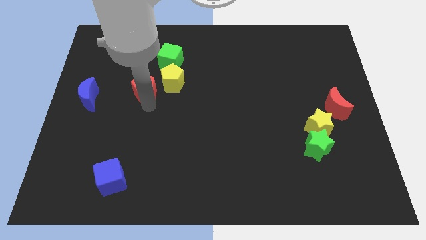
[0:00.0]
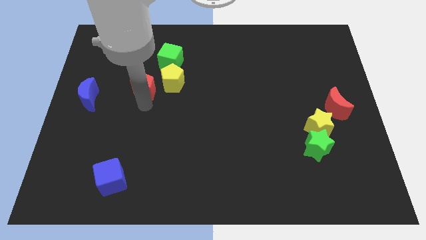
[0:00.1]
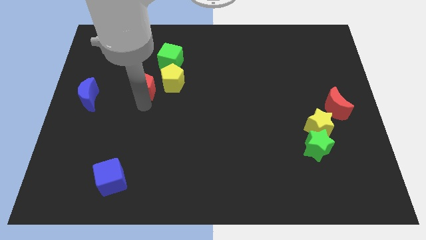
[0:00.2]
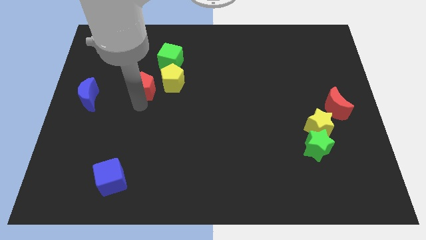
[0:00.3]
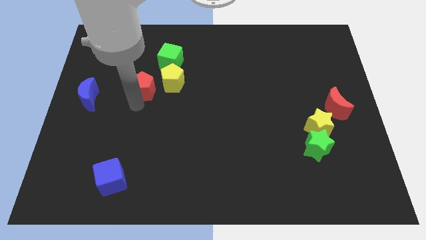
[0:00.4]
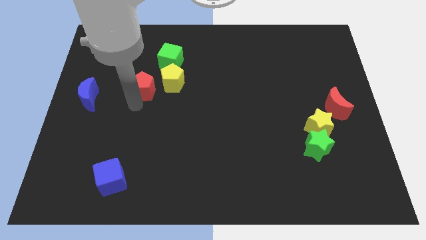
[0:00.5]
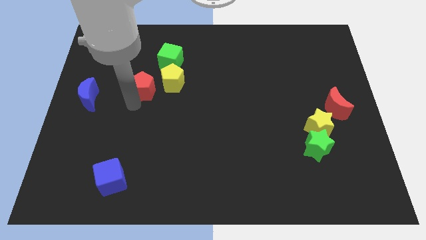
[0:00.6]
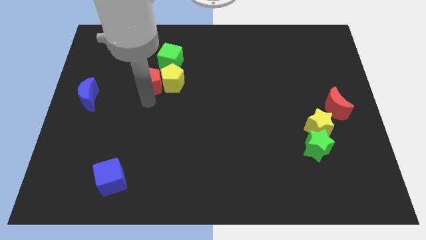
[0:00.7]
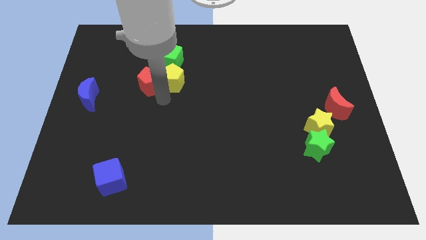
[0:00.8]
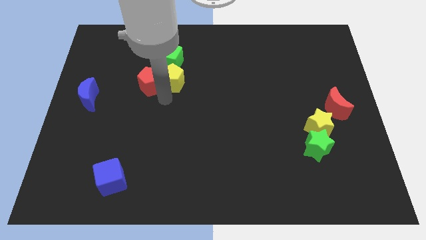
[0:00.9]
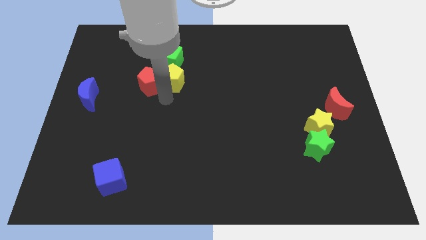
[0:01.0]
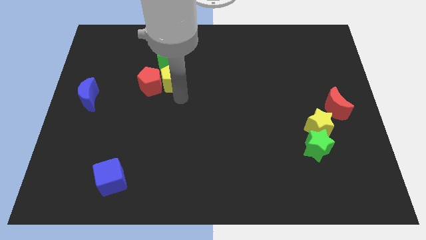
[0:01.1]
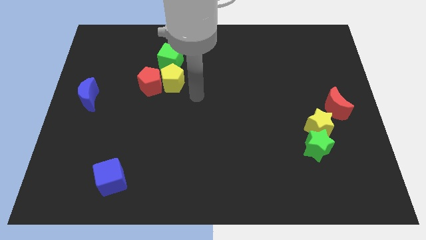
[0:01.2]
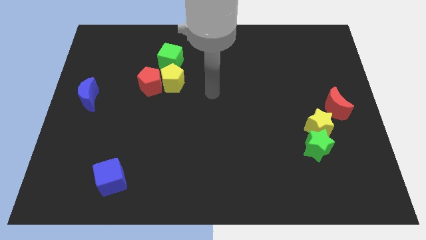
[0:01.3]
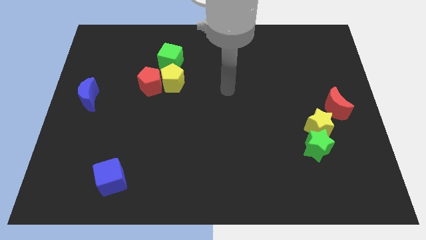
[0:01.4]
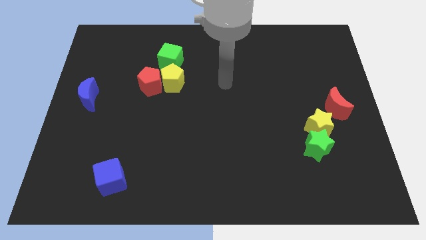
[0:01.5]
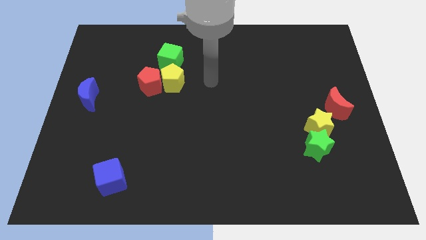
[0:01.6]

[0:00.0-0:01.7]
point your arm at the right side of the yellow pentagon

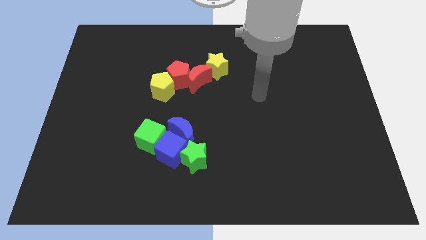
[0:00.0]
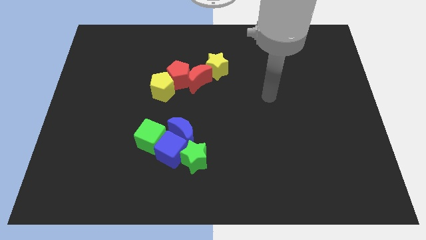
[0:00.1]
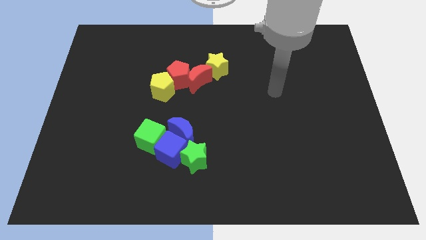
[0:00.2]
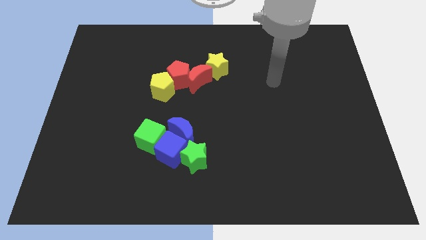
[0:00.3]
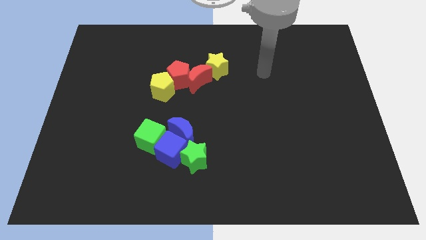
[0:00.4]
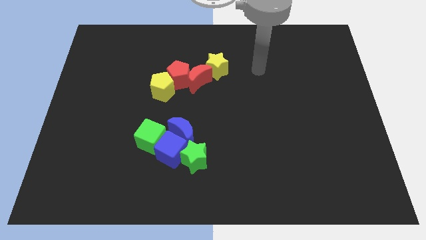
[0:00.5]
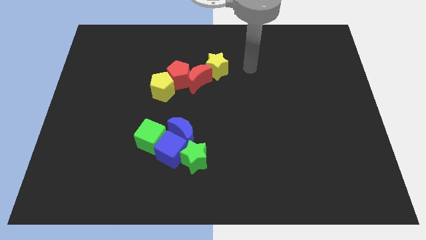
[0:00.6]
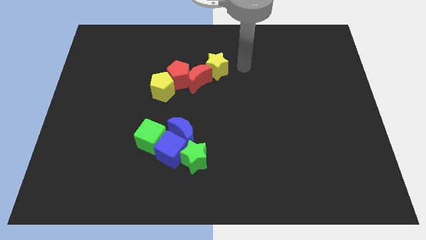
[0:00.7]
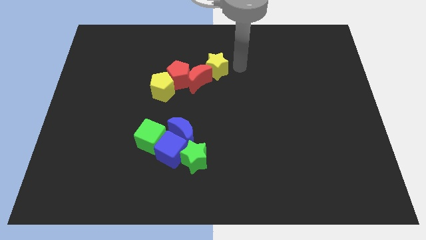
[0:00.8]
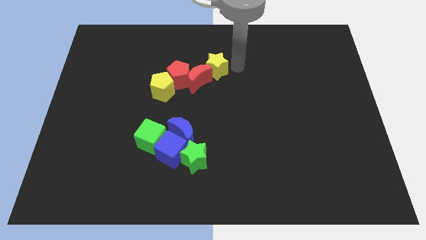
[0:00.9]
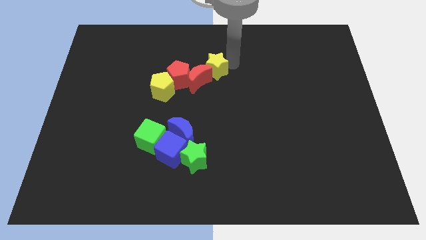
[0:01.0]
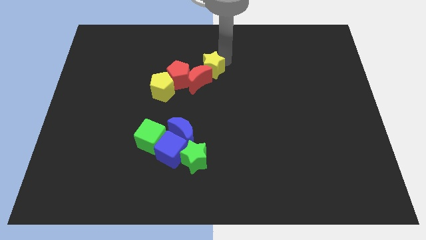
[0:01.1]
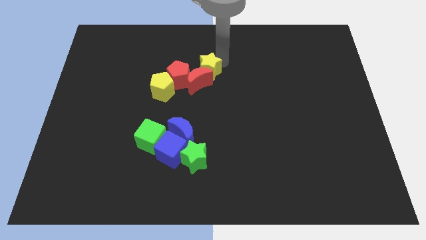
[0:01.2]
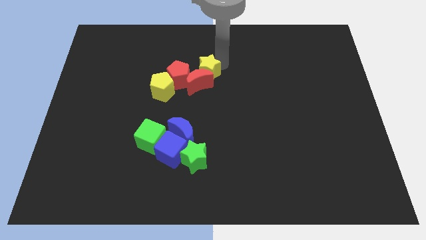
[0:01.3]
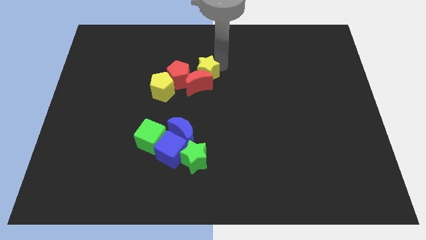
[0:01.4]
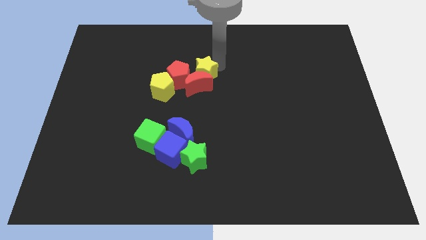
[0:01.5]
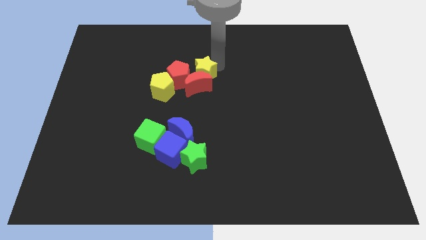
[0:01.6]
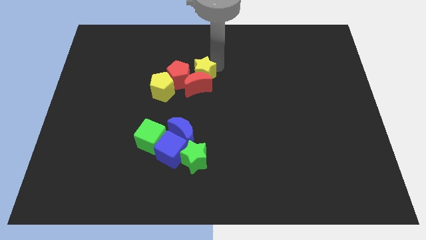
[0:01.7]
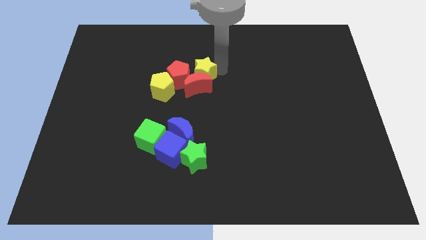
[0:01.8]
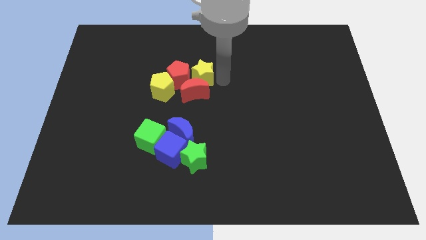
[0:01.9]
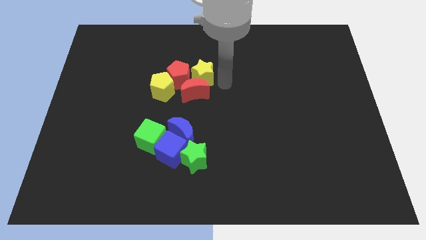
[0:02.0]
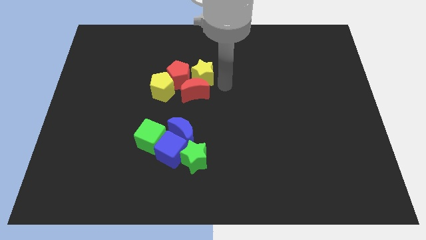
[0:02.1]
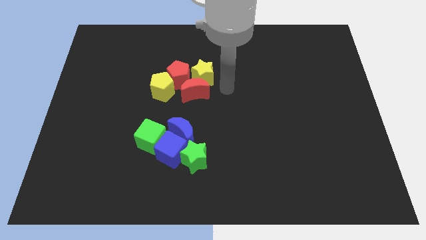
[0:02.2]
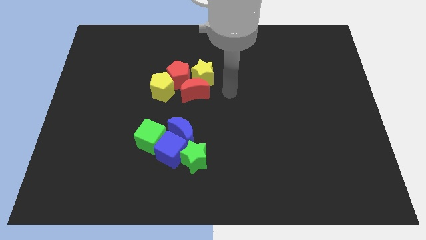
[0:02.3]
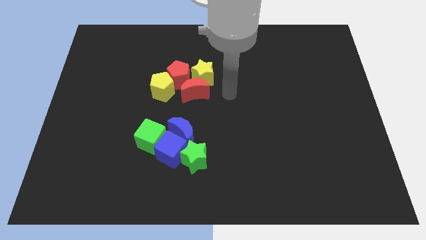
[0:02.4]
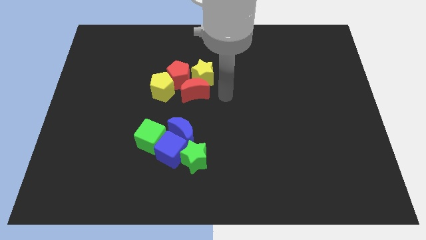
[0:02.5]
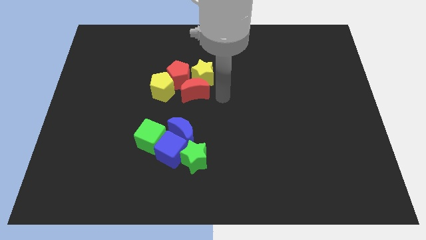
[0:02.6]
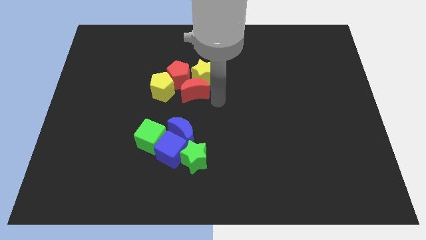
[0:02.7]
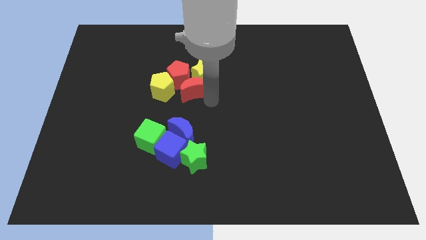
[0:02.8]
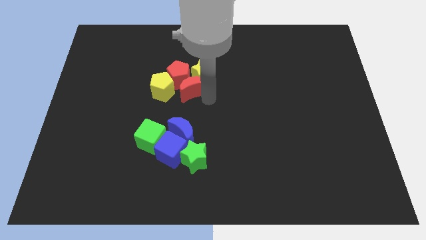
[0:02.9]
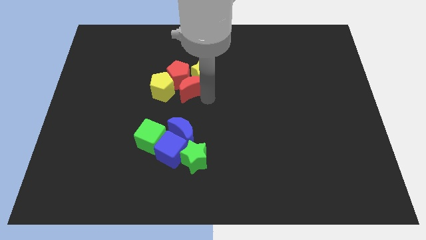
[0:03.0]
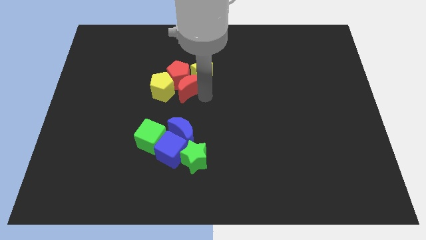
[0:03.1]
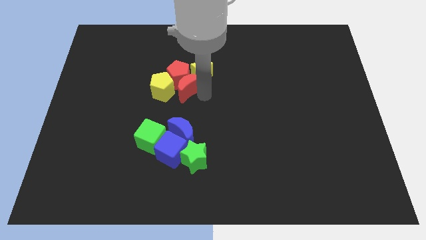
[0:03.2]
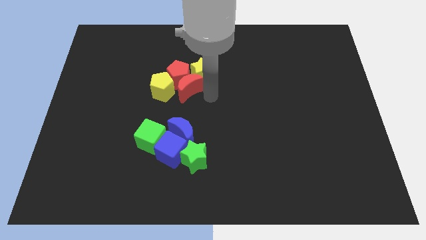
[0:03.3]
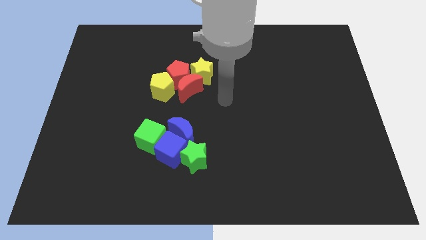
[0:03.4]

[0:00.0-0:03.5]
adjust the yellow star and the red crescent at the center of the board

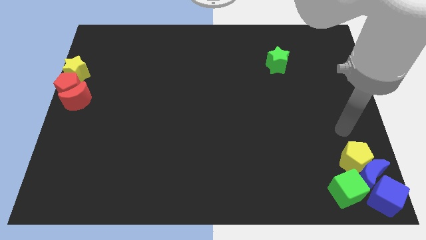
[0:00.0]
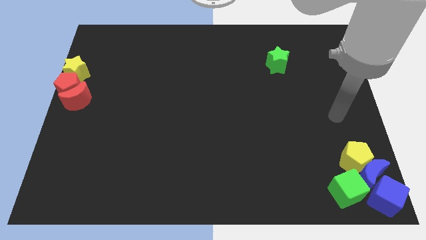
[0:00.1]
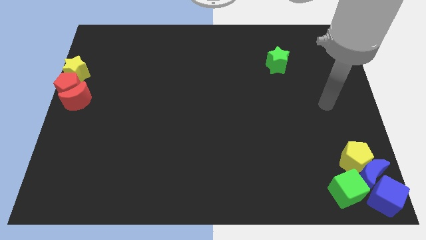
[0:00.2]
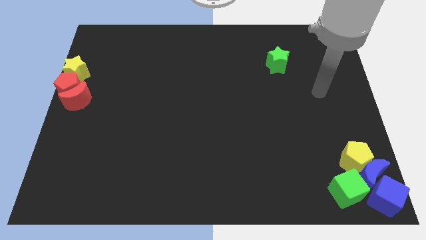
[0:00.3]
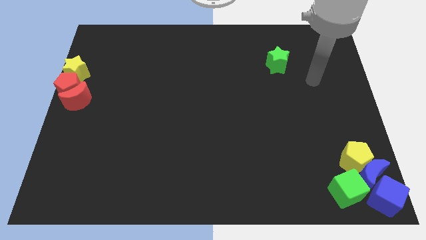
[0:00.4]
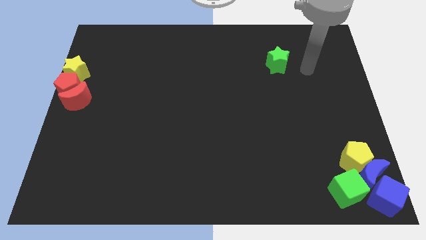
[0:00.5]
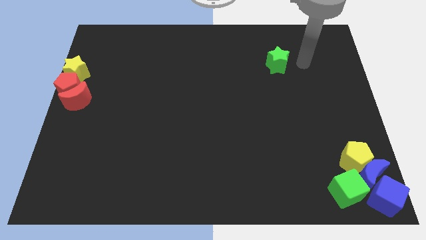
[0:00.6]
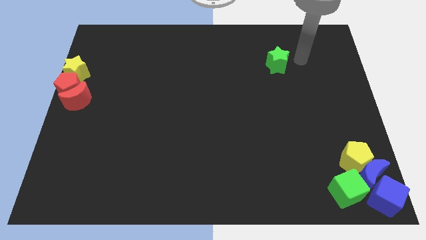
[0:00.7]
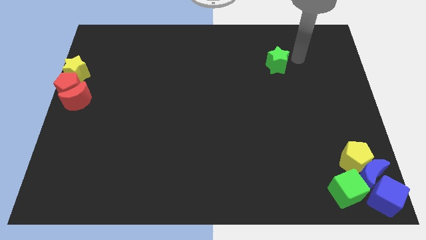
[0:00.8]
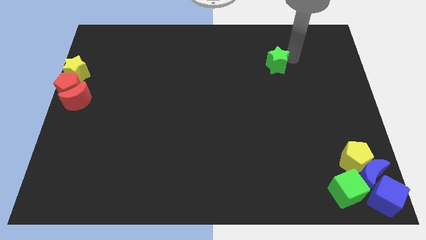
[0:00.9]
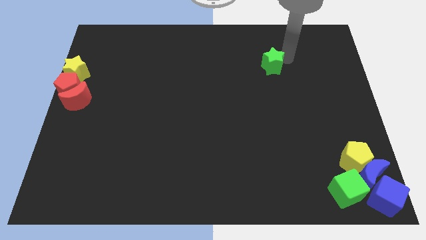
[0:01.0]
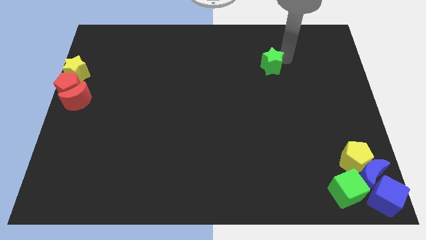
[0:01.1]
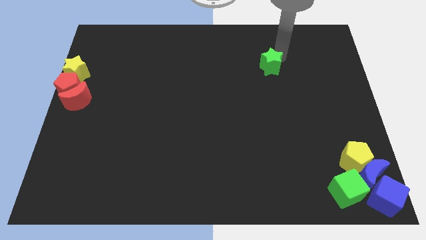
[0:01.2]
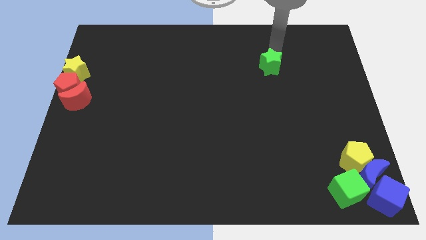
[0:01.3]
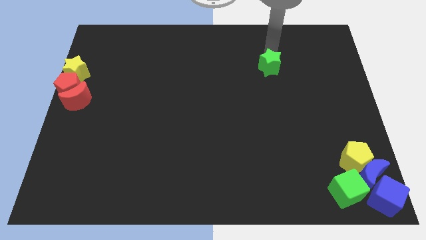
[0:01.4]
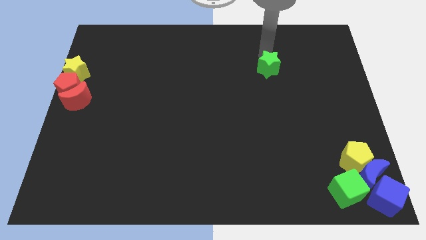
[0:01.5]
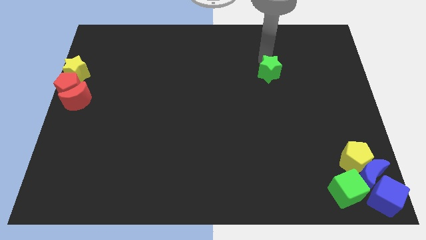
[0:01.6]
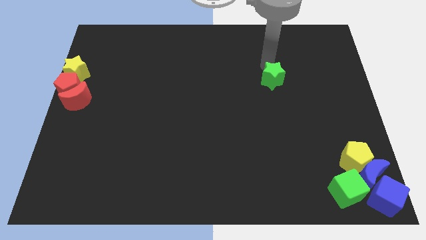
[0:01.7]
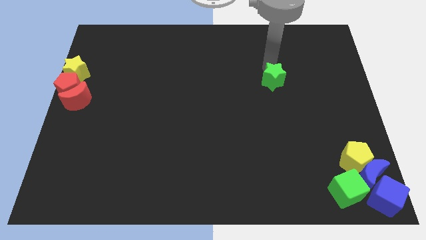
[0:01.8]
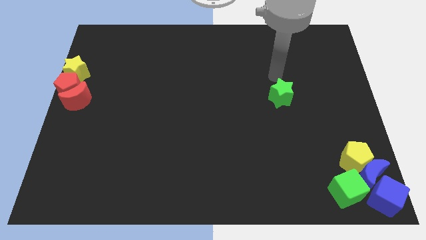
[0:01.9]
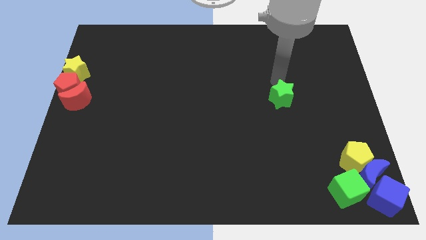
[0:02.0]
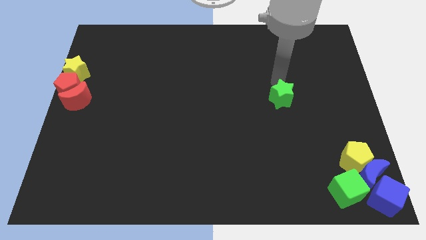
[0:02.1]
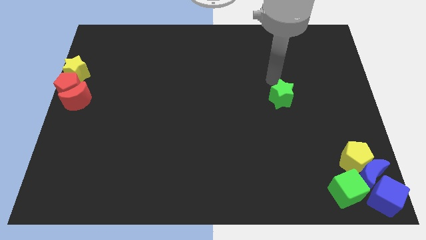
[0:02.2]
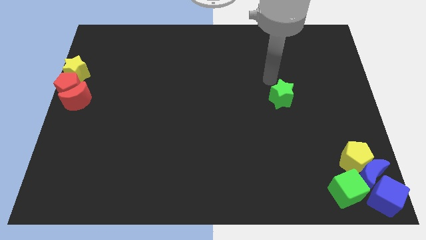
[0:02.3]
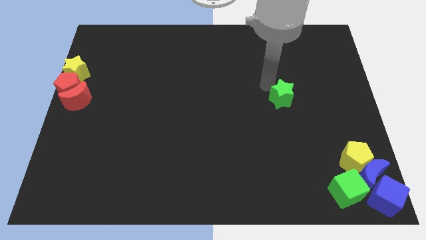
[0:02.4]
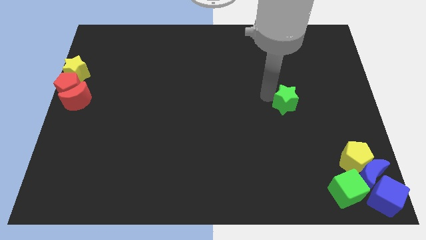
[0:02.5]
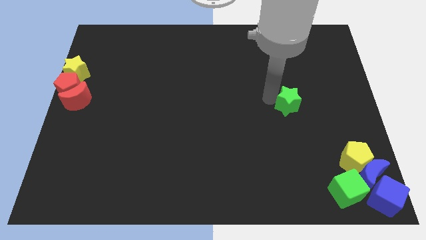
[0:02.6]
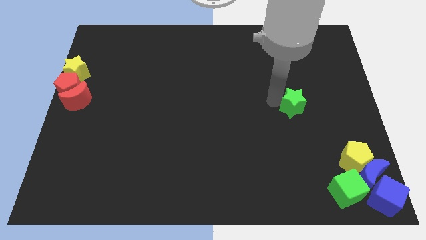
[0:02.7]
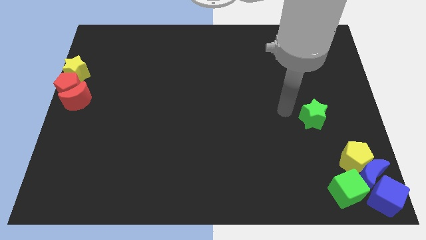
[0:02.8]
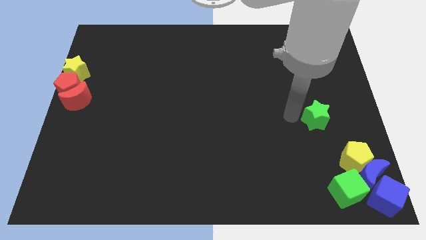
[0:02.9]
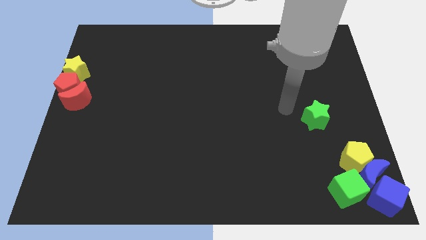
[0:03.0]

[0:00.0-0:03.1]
move the green star towards yellow pentagon

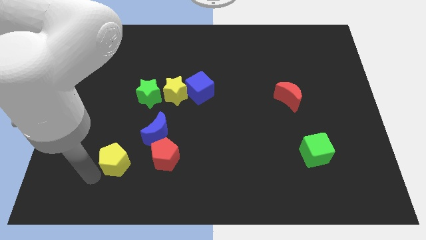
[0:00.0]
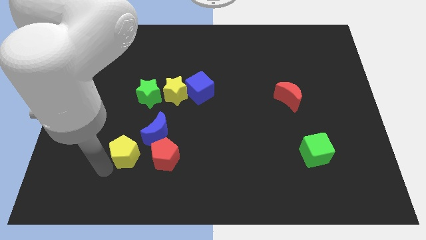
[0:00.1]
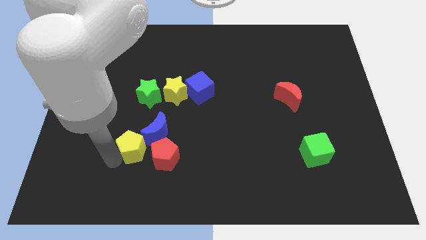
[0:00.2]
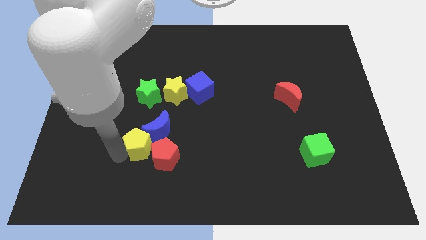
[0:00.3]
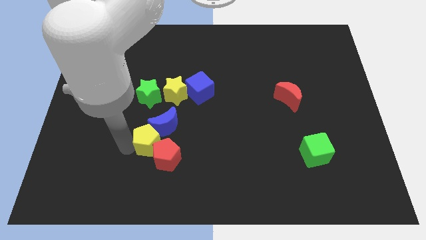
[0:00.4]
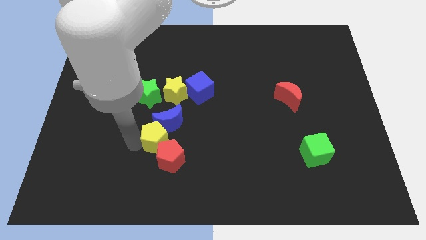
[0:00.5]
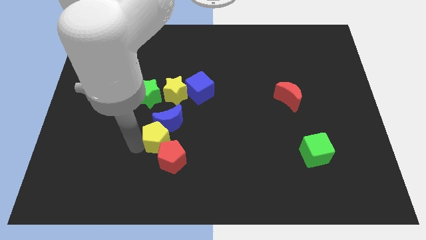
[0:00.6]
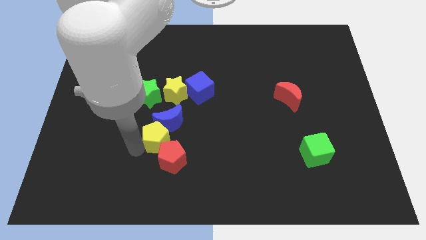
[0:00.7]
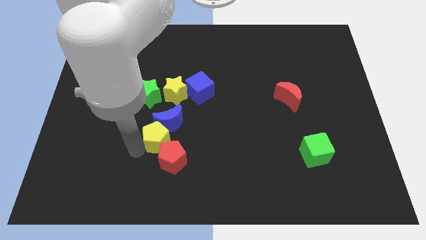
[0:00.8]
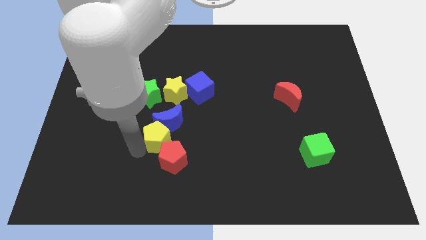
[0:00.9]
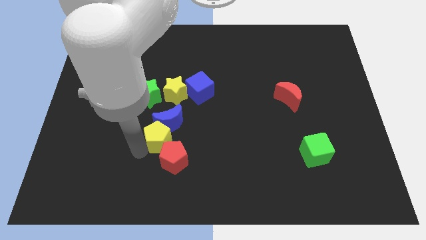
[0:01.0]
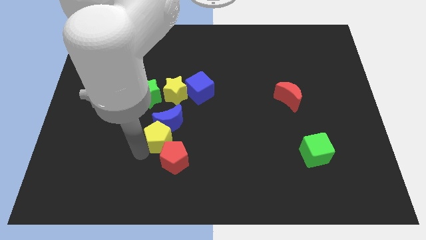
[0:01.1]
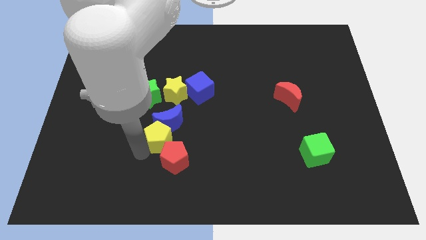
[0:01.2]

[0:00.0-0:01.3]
push the blue moon with the yellow pentagon
